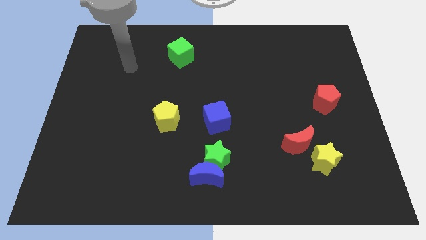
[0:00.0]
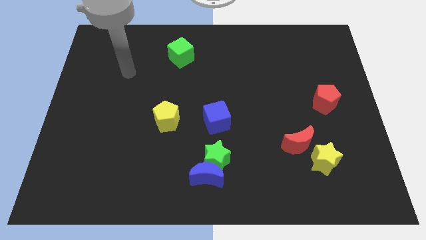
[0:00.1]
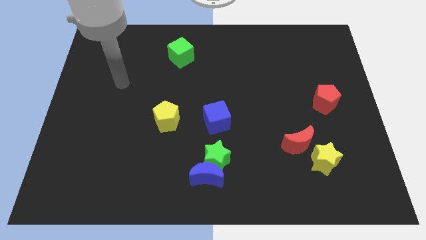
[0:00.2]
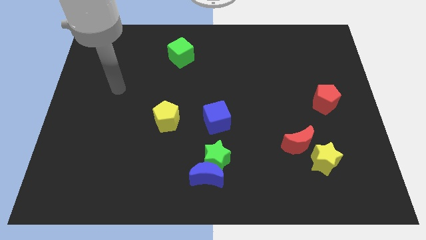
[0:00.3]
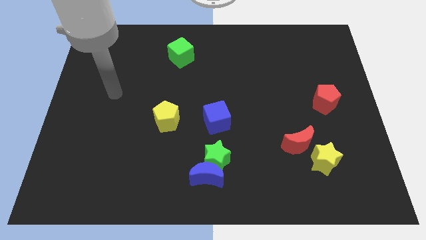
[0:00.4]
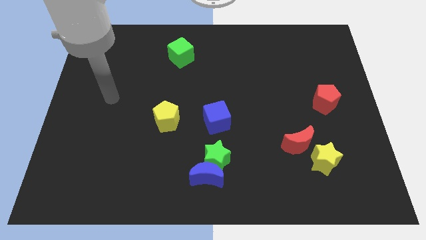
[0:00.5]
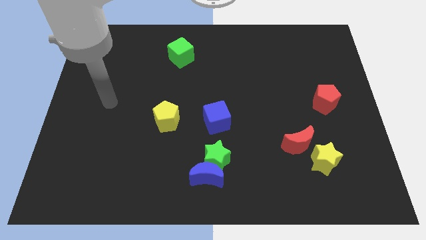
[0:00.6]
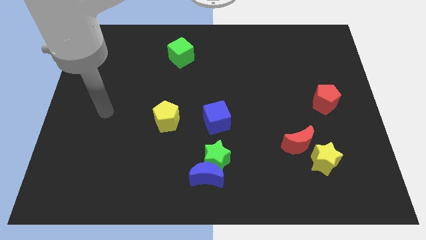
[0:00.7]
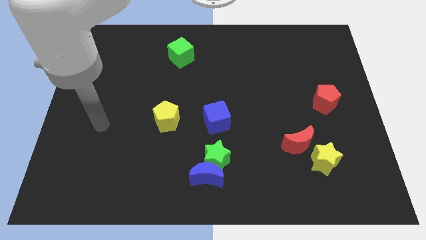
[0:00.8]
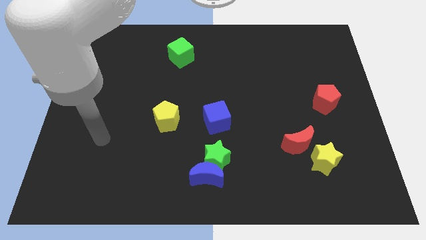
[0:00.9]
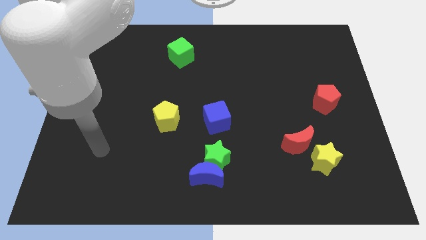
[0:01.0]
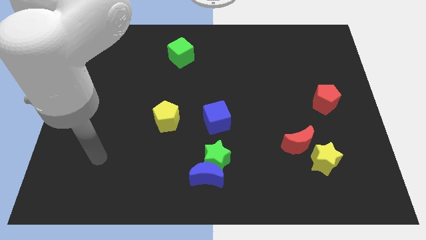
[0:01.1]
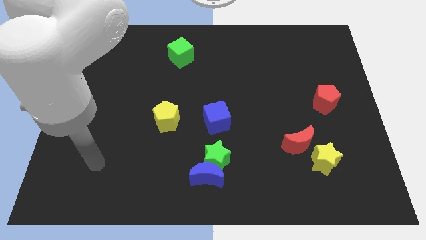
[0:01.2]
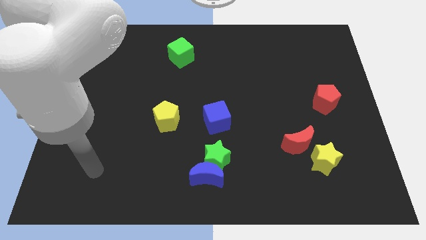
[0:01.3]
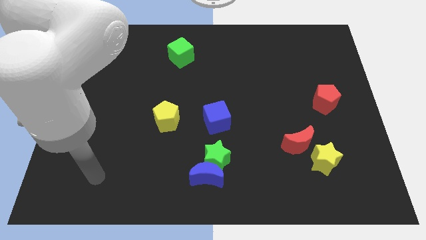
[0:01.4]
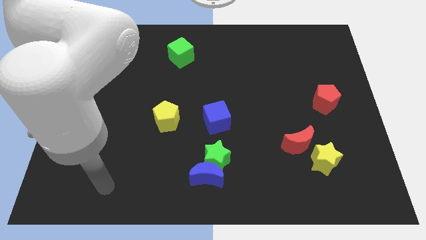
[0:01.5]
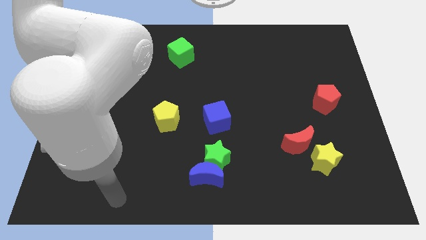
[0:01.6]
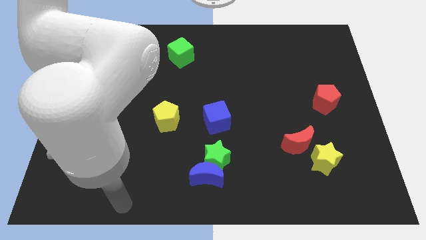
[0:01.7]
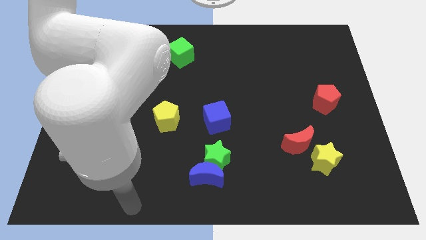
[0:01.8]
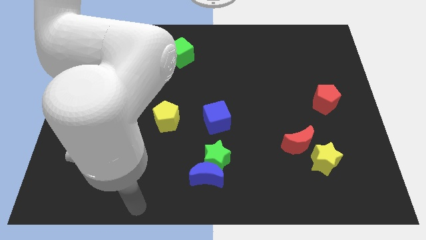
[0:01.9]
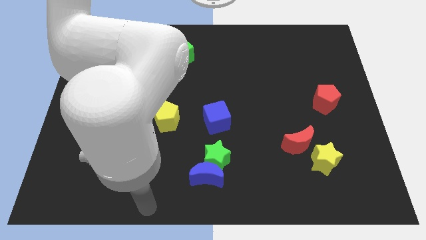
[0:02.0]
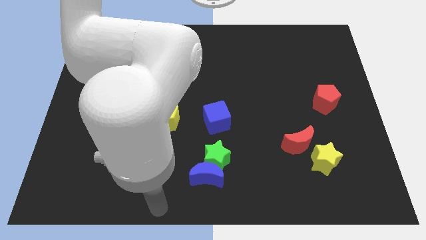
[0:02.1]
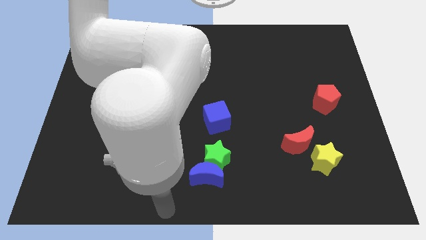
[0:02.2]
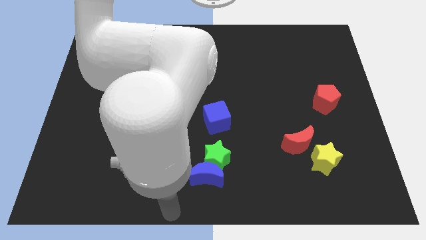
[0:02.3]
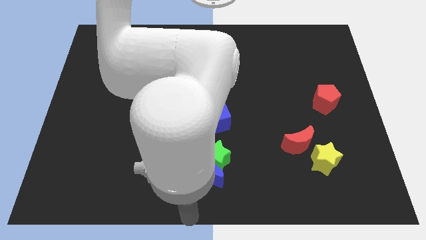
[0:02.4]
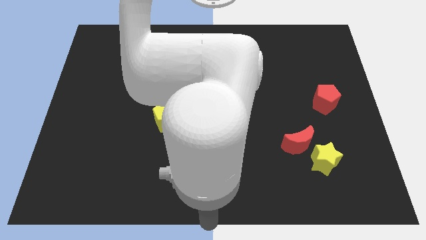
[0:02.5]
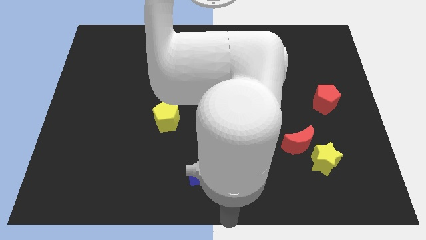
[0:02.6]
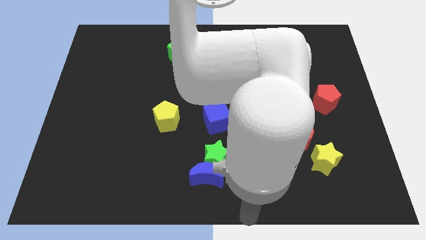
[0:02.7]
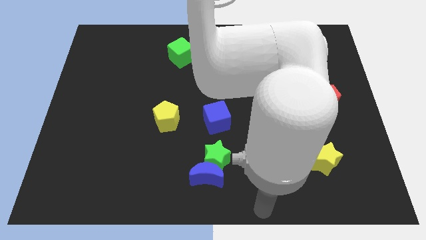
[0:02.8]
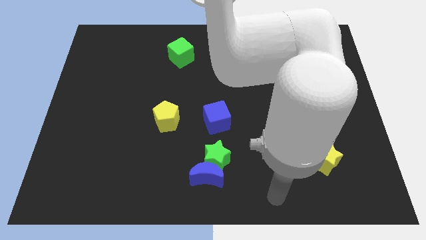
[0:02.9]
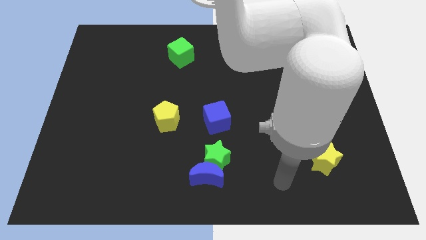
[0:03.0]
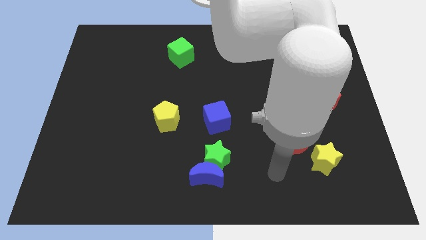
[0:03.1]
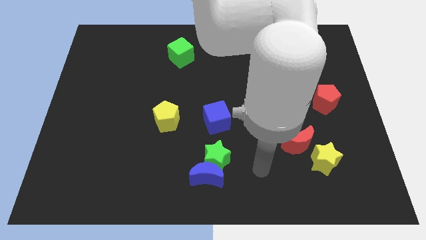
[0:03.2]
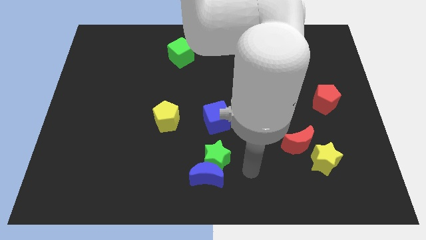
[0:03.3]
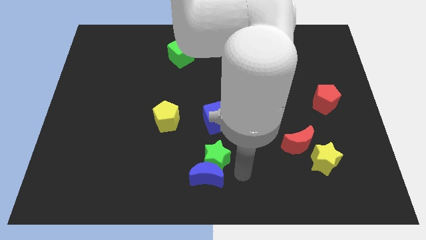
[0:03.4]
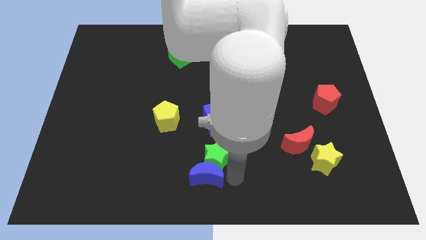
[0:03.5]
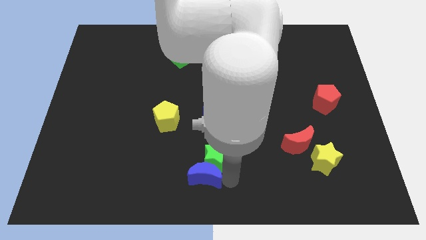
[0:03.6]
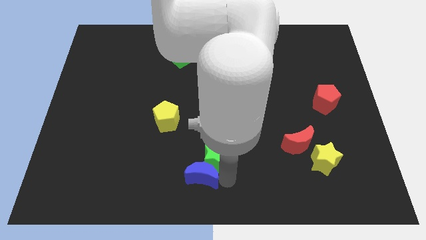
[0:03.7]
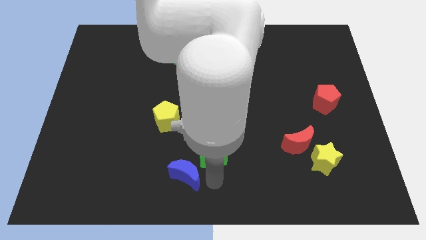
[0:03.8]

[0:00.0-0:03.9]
separate the blue crescent from the green star

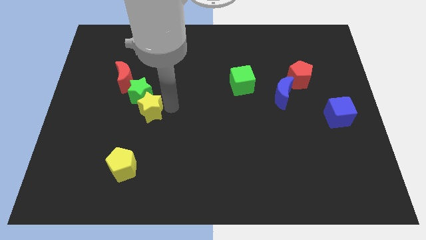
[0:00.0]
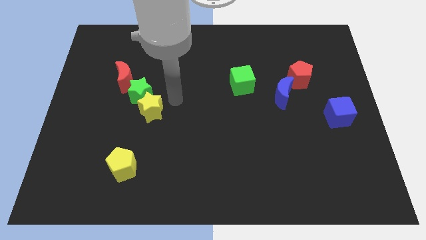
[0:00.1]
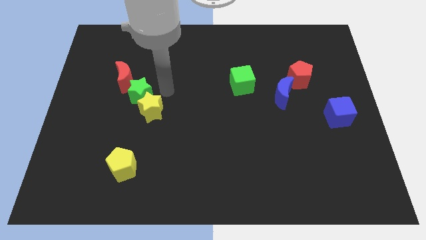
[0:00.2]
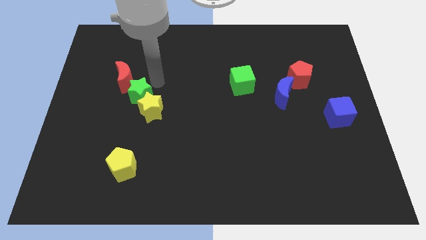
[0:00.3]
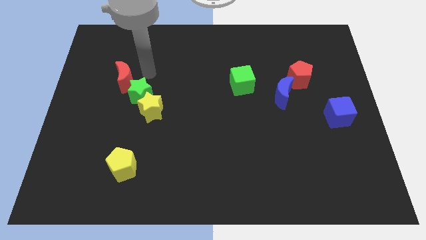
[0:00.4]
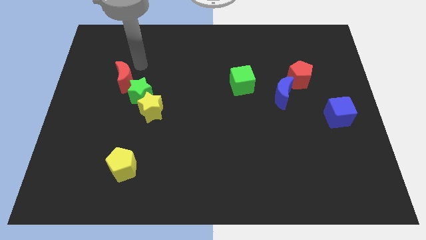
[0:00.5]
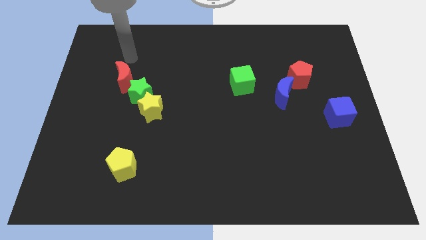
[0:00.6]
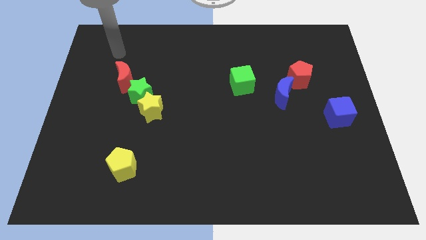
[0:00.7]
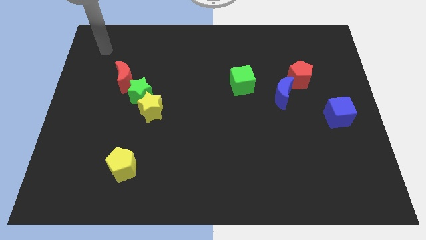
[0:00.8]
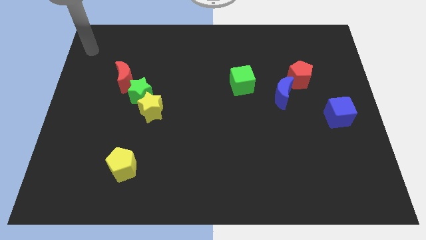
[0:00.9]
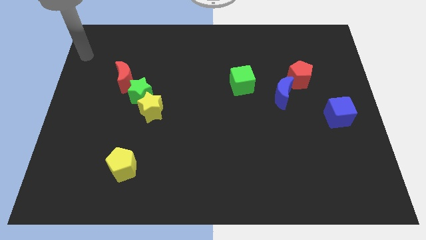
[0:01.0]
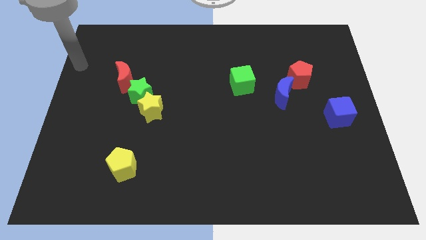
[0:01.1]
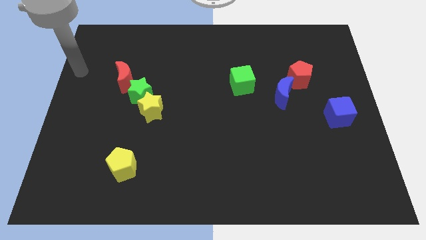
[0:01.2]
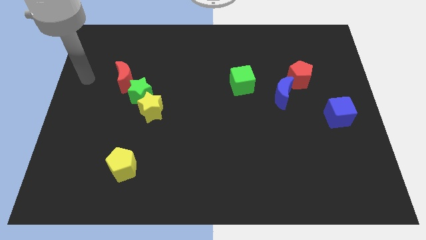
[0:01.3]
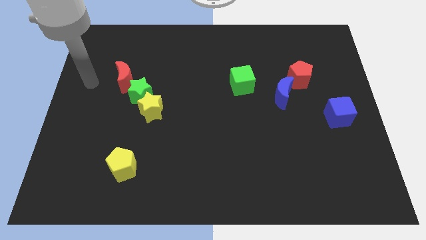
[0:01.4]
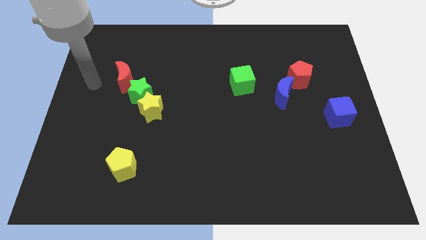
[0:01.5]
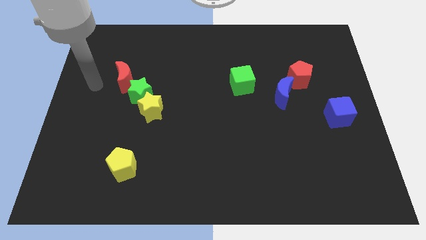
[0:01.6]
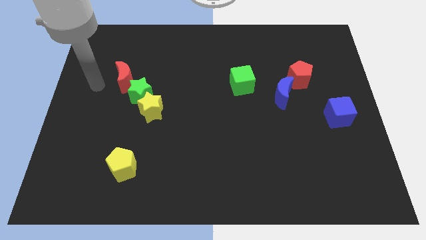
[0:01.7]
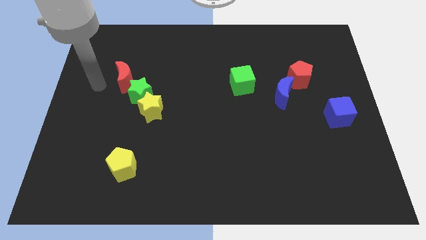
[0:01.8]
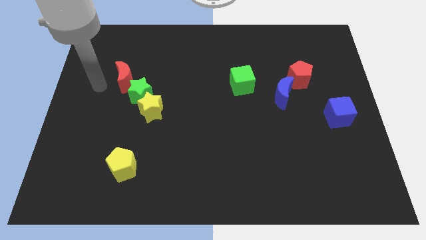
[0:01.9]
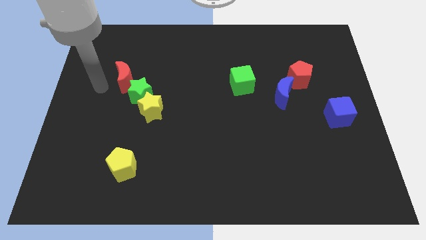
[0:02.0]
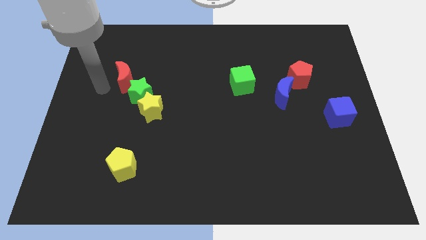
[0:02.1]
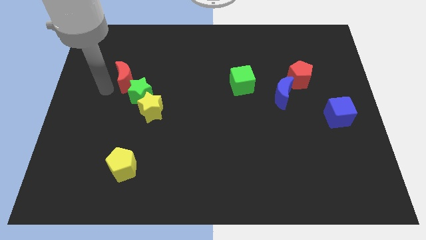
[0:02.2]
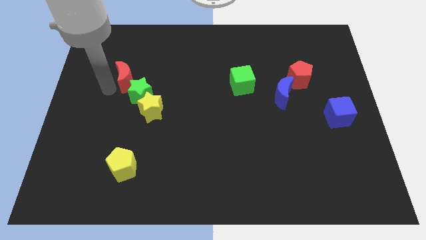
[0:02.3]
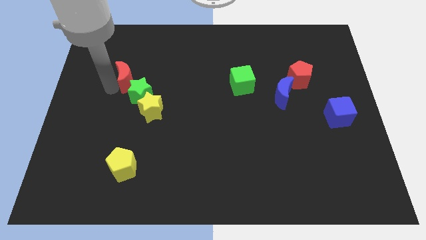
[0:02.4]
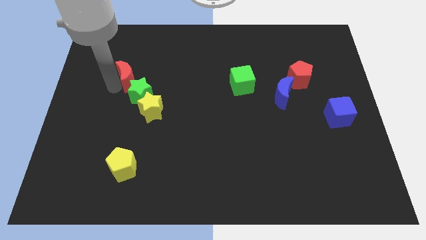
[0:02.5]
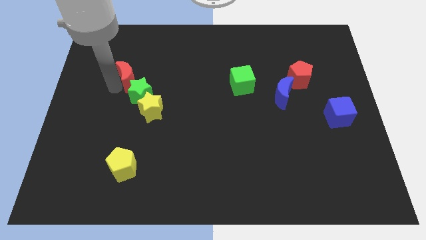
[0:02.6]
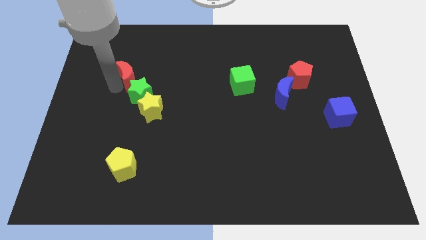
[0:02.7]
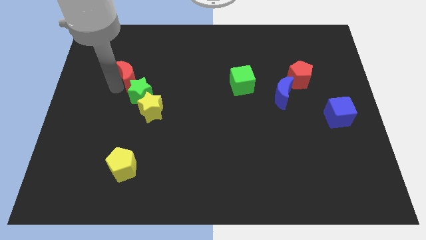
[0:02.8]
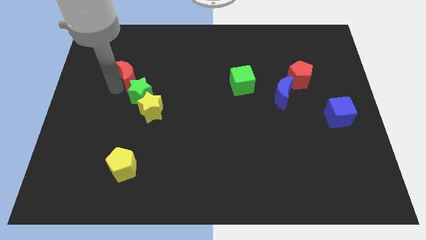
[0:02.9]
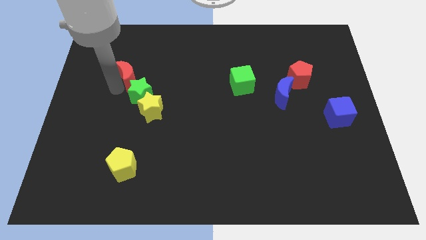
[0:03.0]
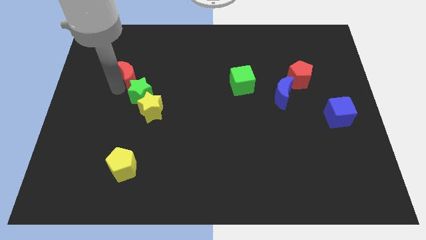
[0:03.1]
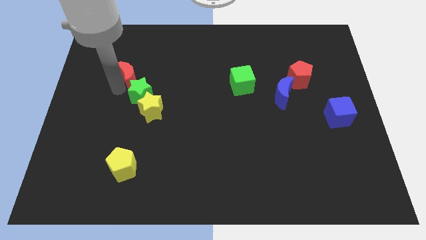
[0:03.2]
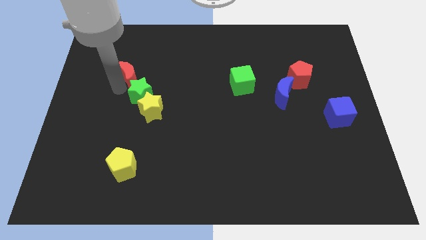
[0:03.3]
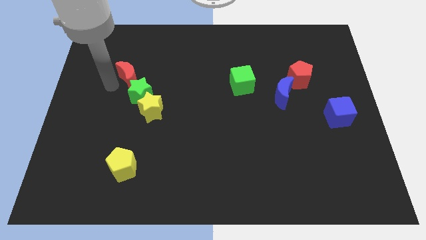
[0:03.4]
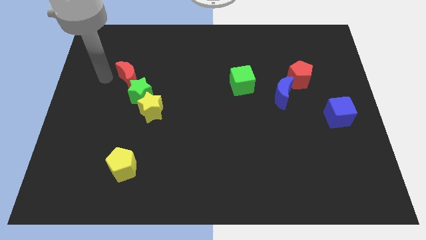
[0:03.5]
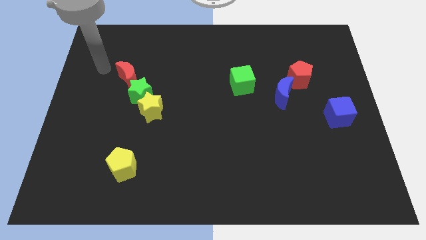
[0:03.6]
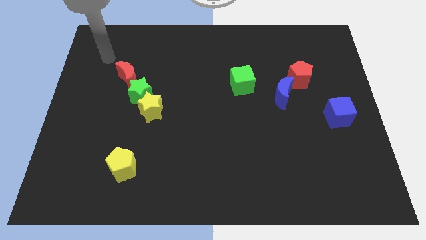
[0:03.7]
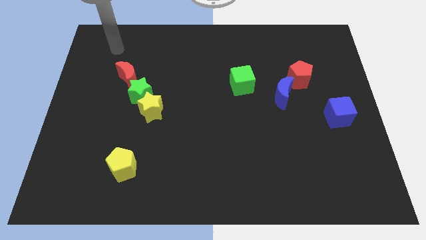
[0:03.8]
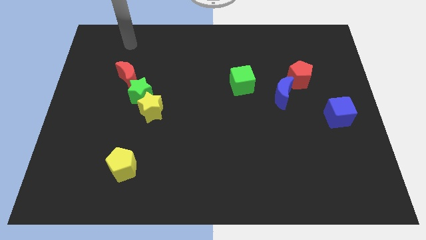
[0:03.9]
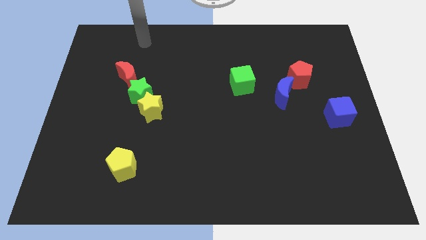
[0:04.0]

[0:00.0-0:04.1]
adjust the red moon to form a diagnoal line

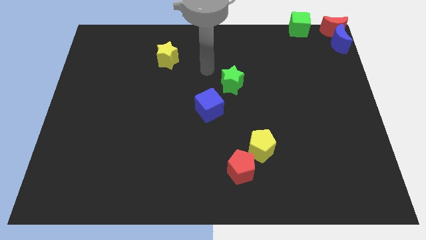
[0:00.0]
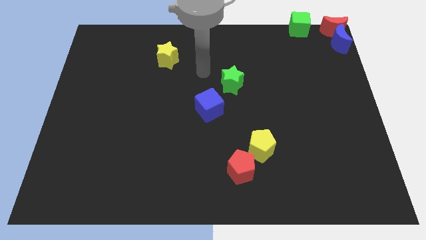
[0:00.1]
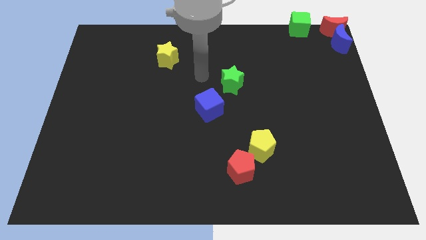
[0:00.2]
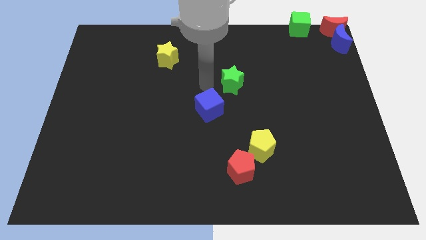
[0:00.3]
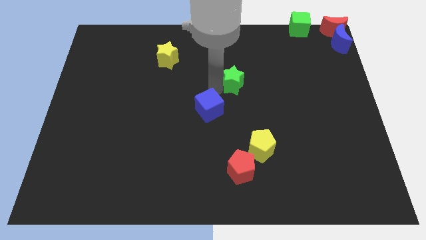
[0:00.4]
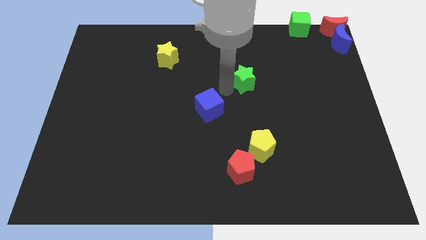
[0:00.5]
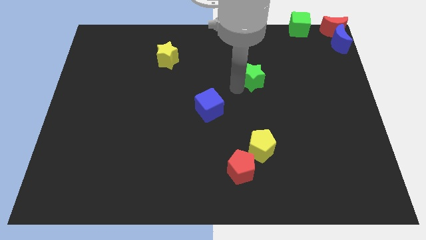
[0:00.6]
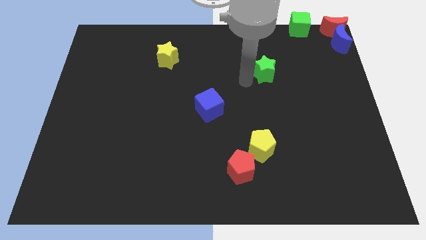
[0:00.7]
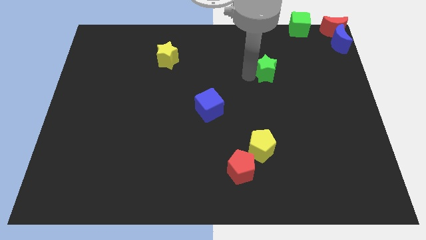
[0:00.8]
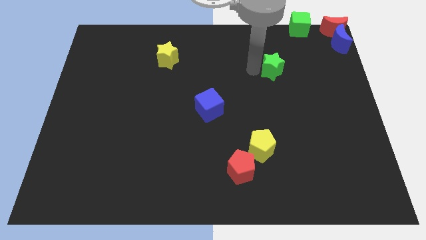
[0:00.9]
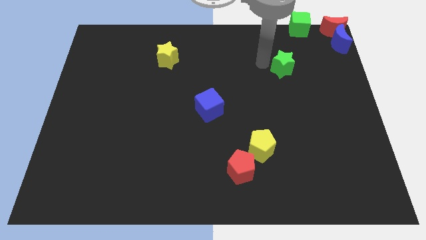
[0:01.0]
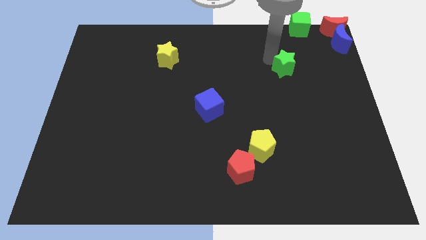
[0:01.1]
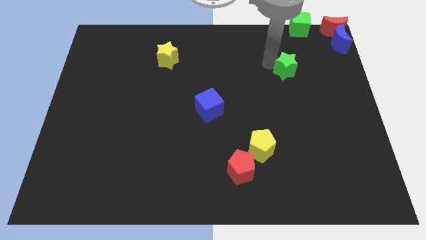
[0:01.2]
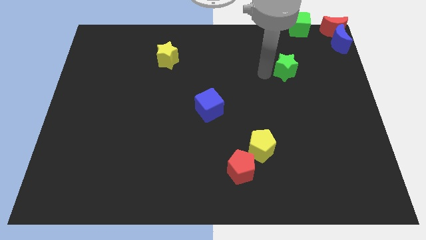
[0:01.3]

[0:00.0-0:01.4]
slide the green star diagonally top right to the yellow pentagon
